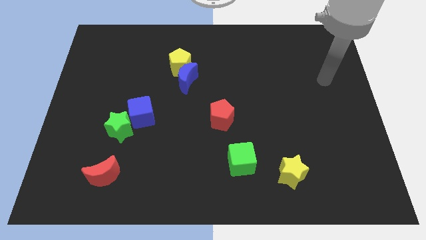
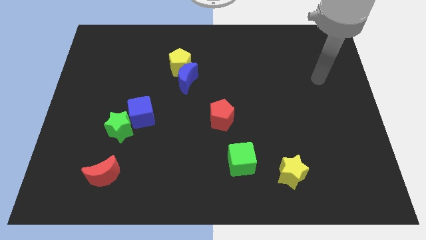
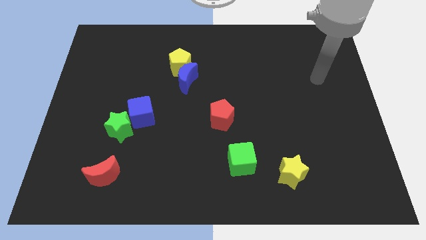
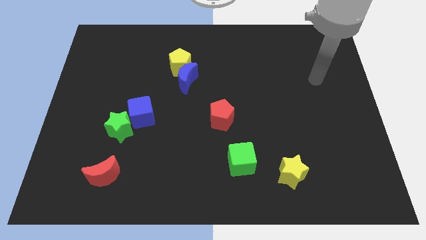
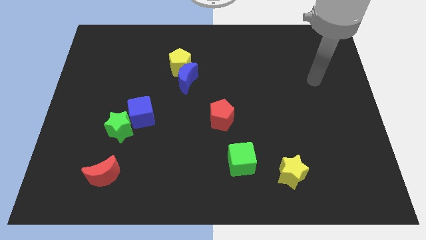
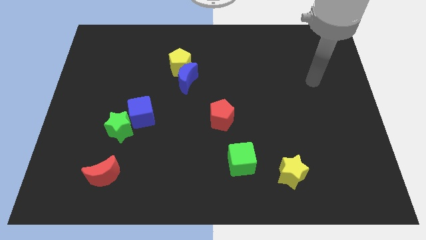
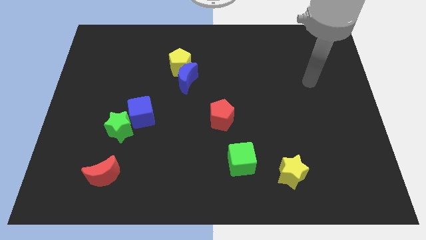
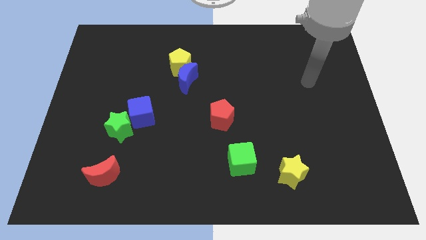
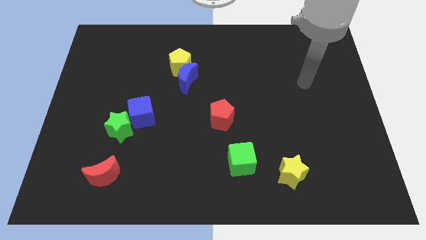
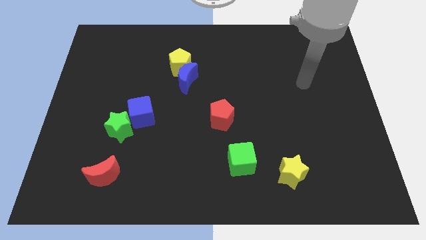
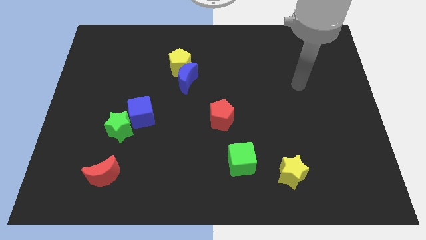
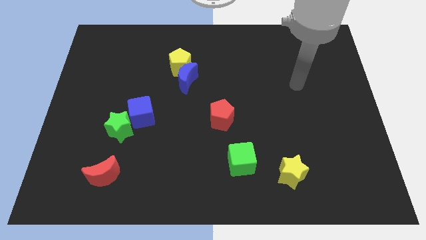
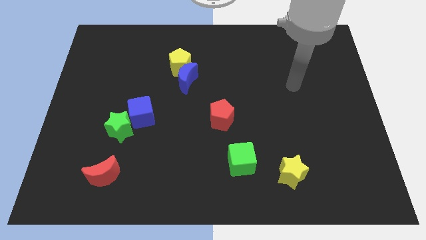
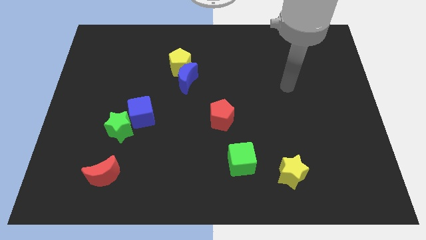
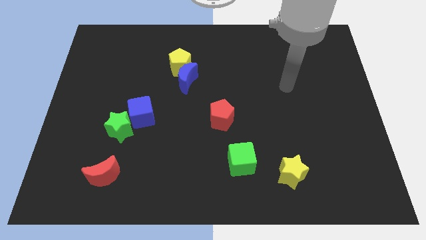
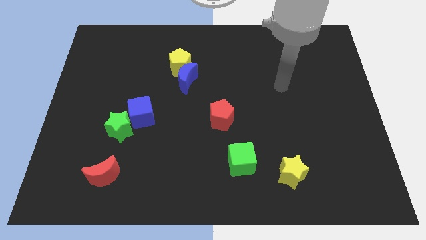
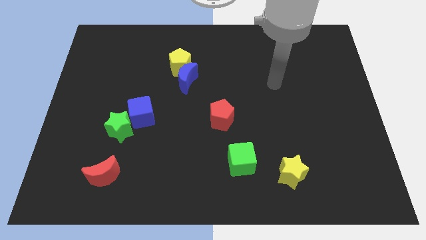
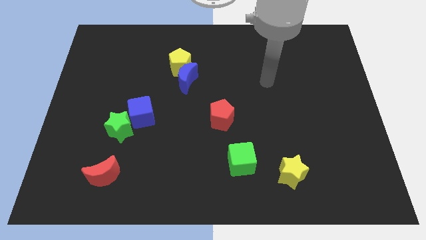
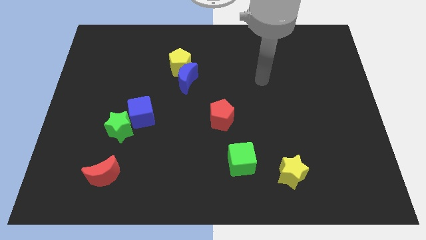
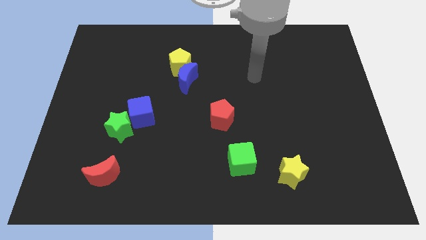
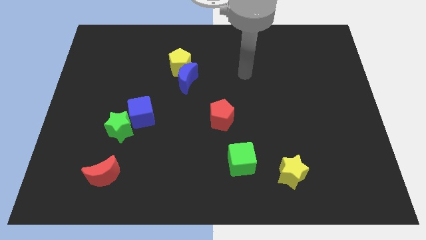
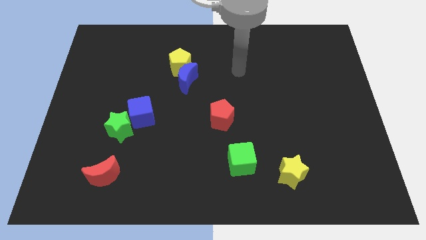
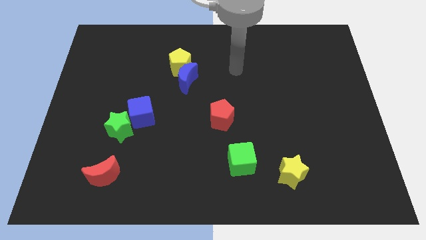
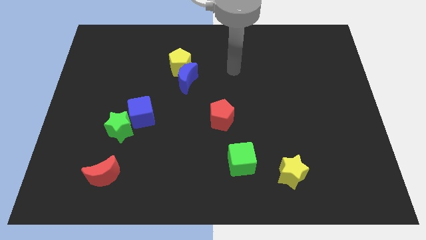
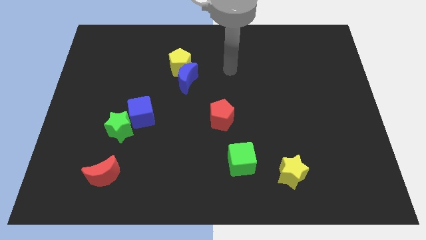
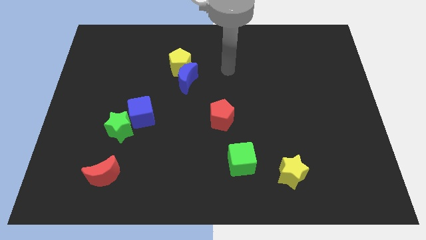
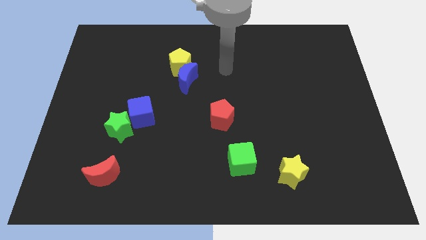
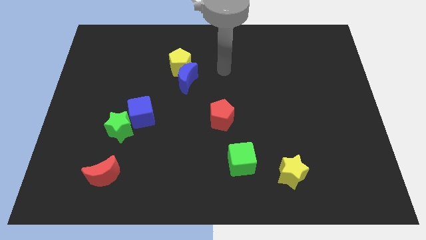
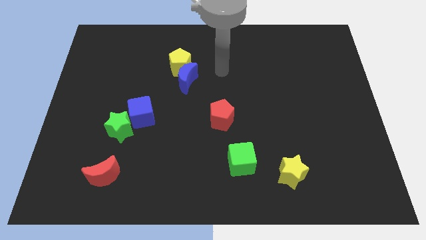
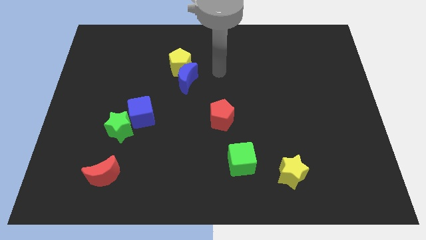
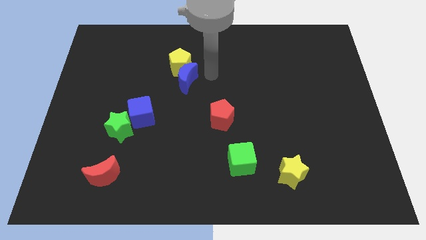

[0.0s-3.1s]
slide your arm near the blue moon

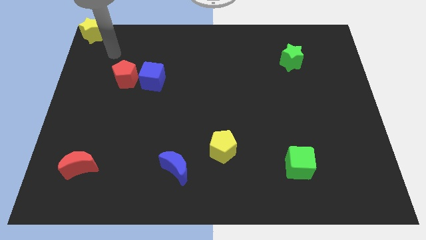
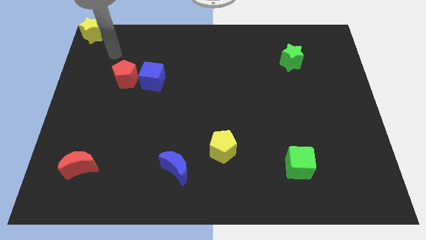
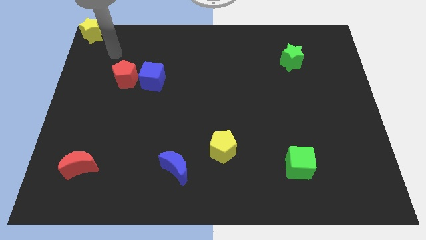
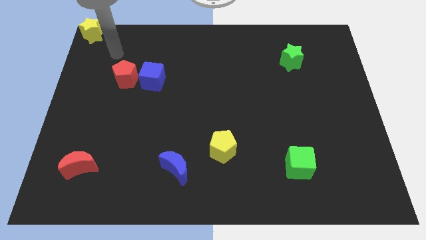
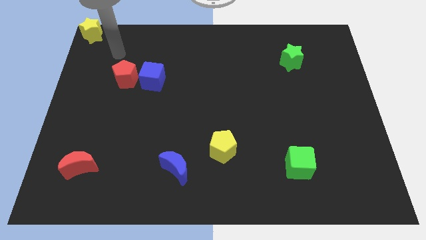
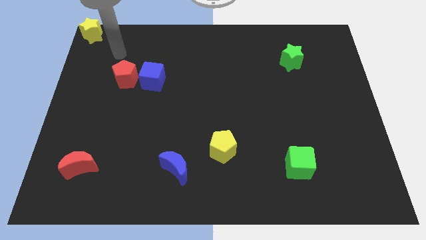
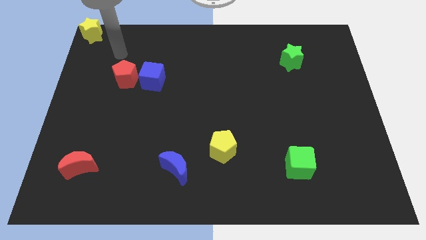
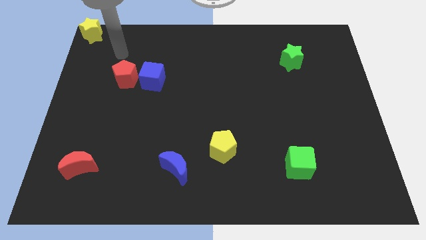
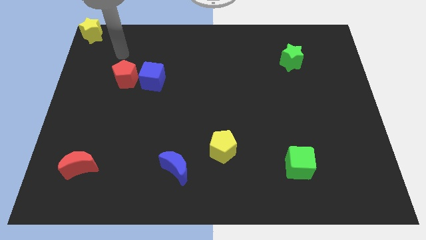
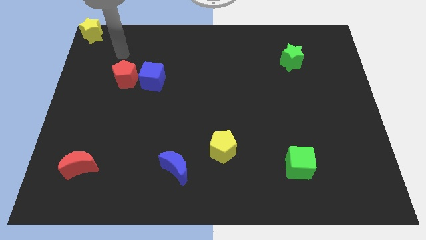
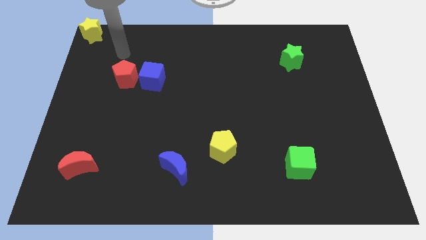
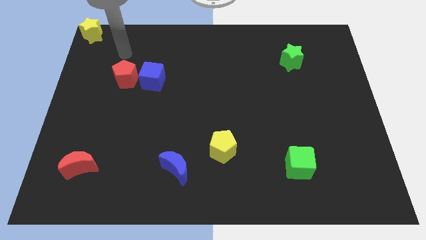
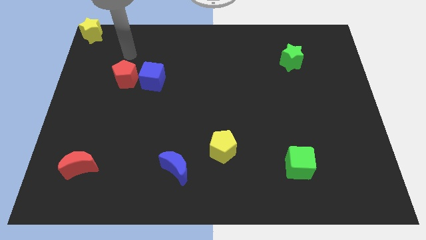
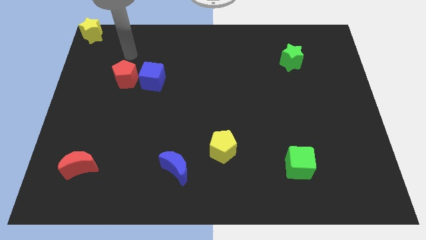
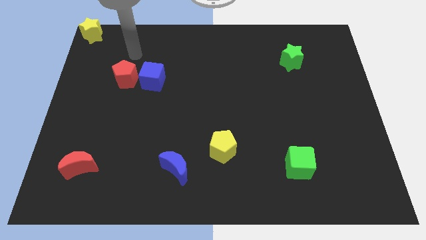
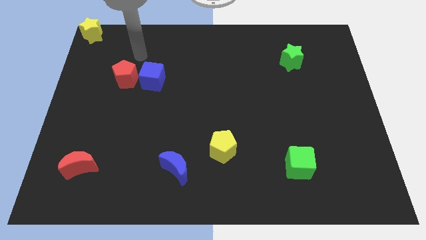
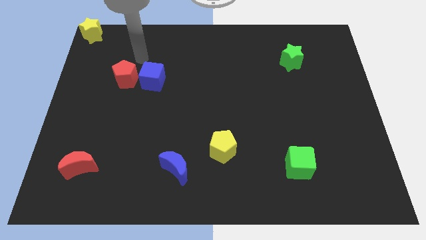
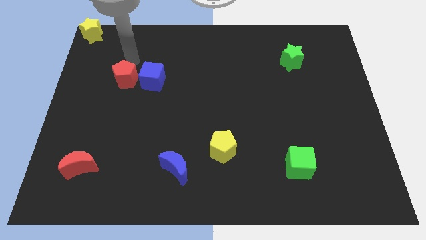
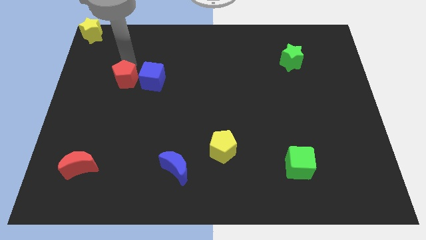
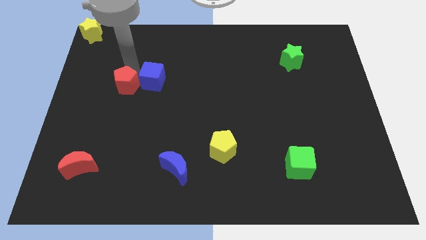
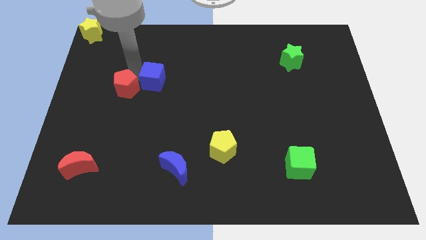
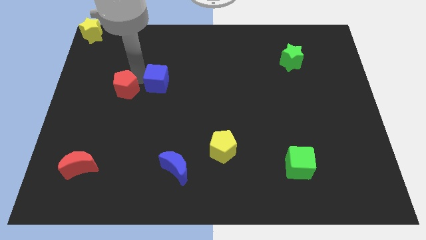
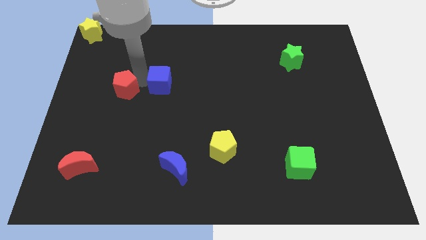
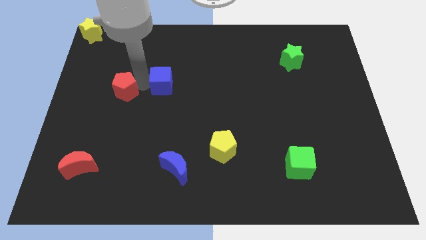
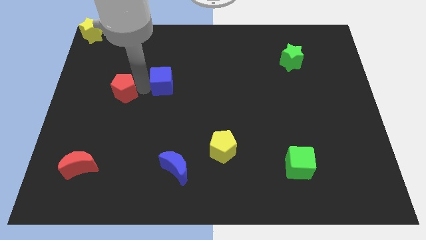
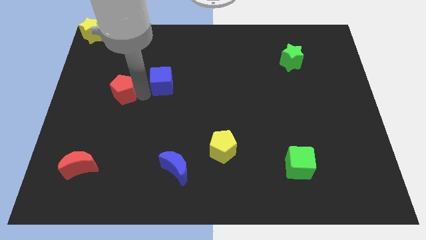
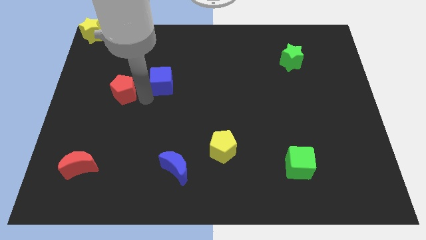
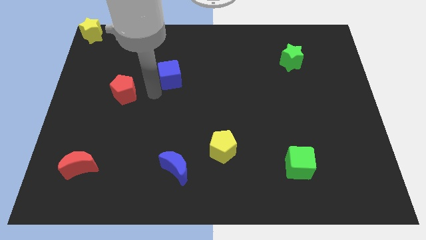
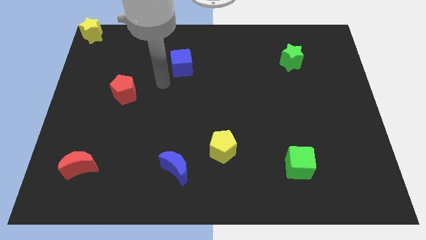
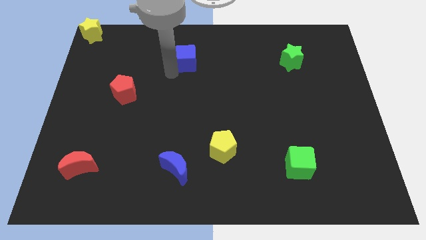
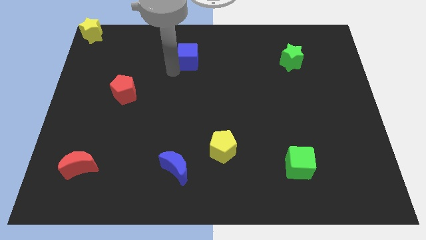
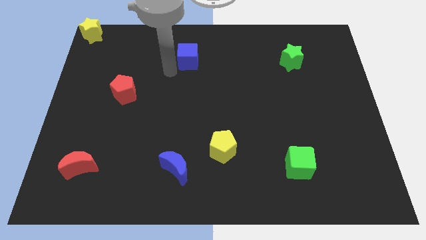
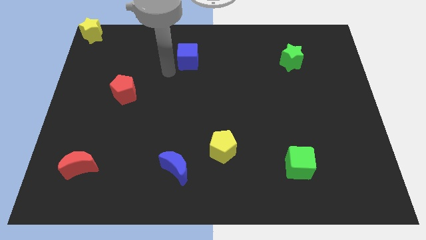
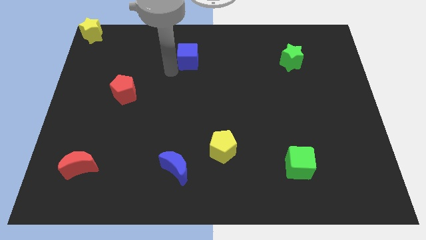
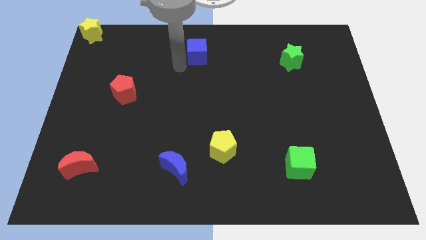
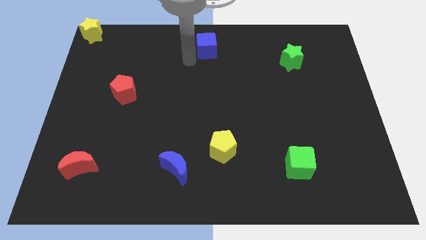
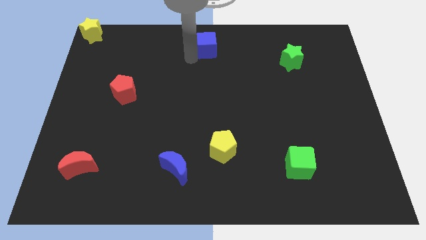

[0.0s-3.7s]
move blue cube away from red pentagon

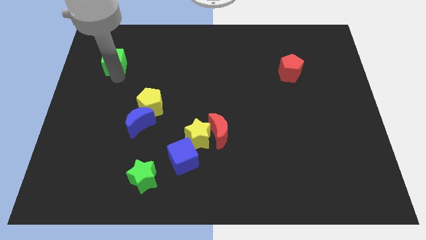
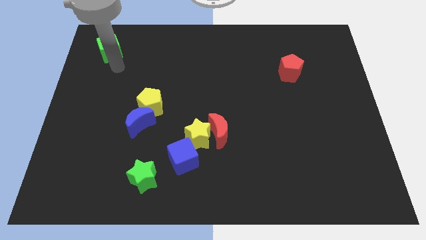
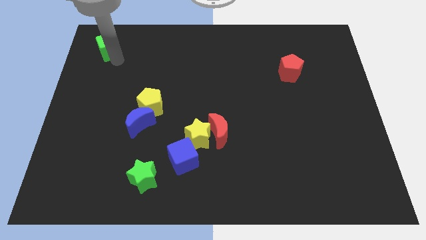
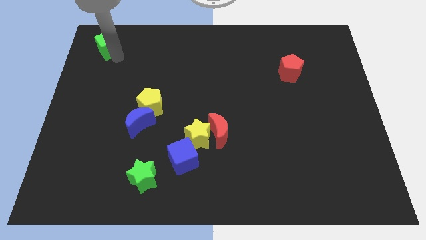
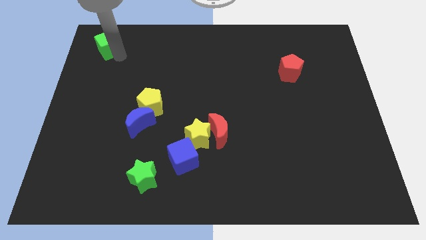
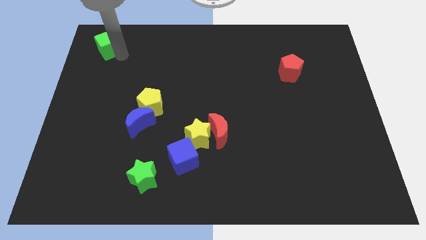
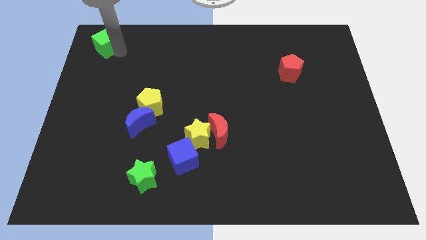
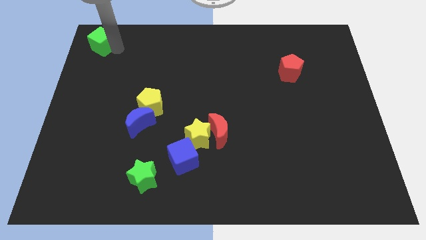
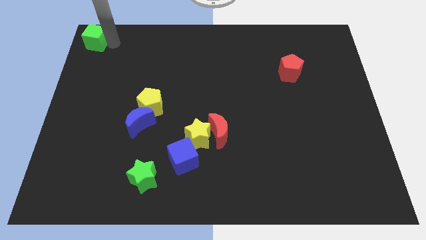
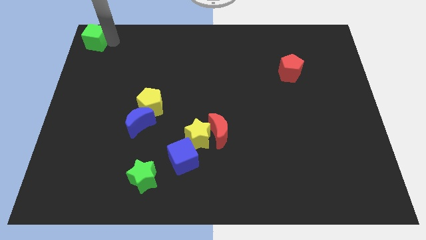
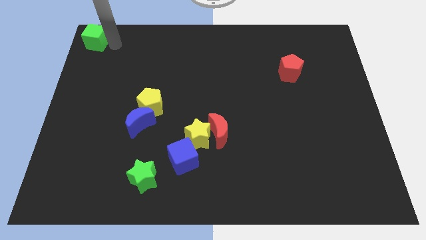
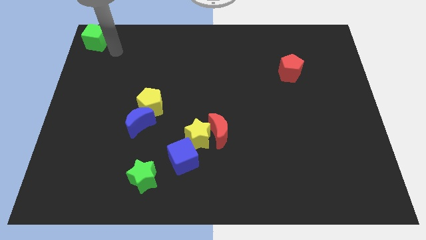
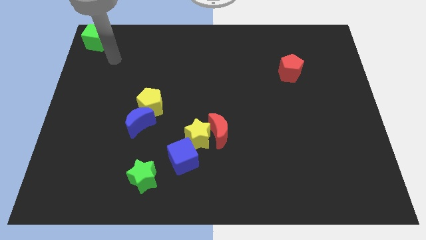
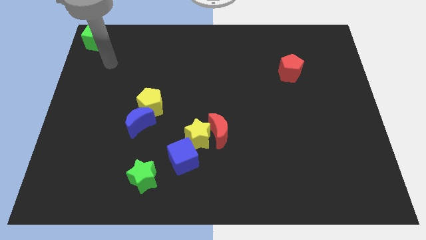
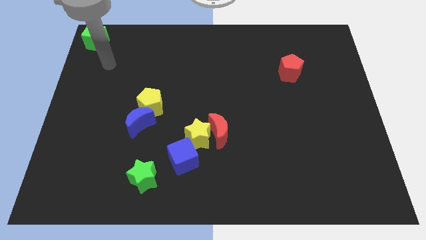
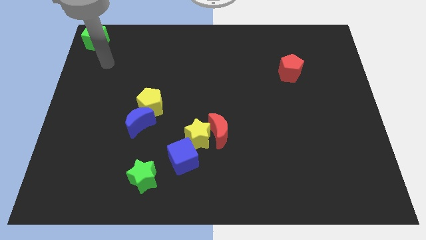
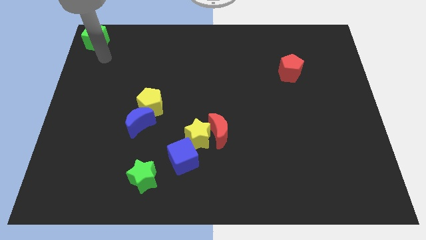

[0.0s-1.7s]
place the green cube at top left side of the board

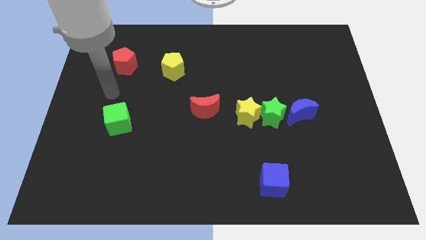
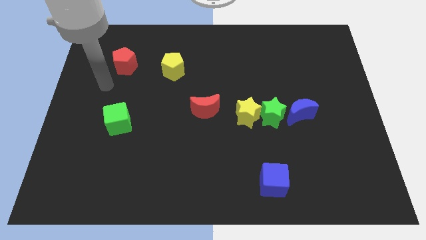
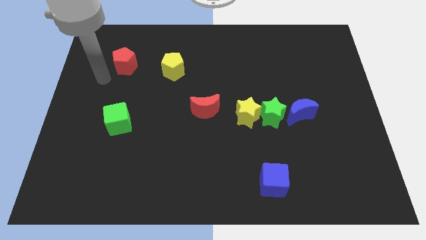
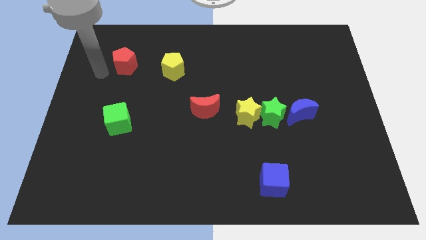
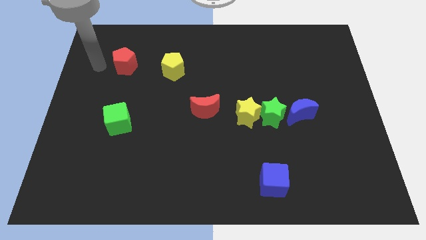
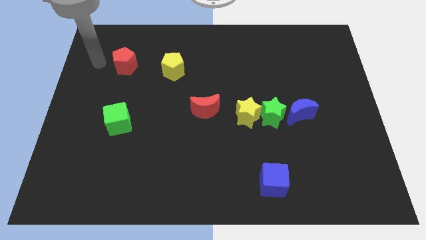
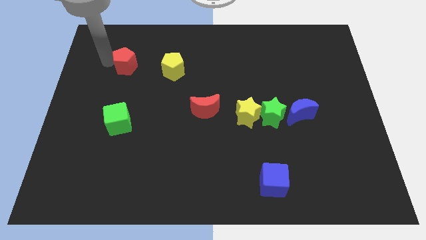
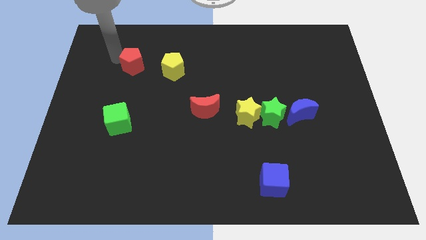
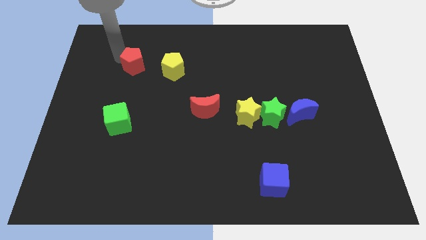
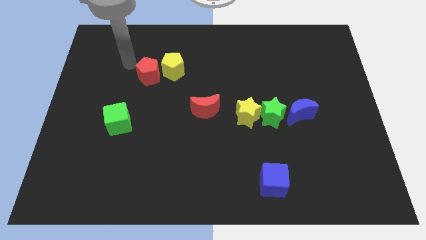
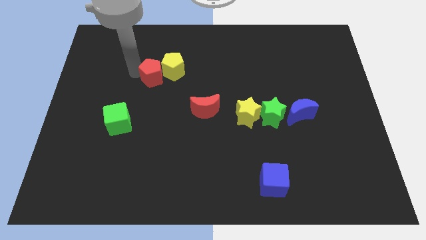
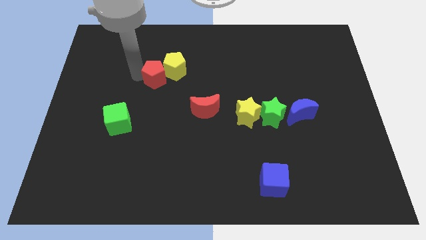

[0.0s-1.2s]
push the red pentagon into the yellow pentagon
